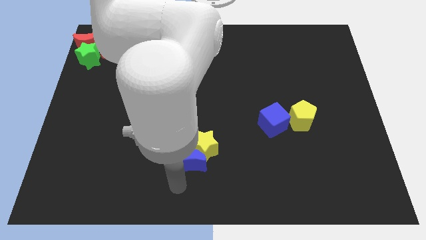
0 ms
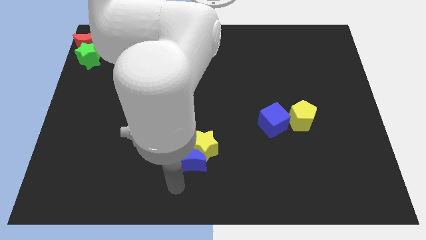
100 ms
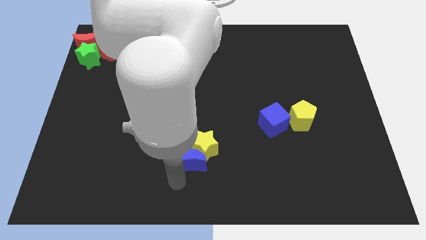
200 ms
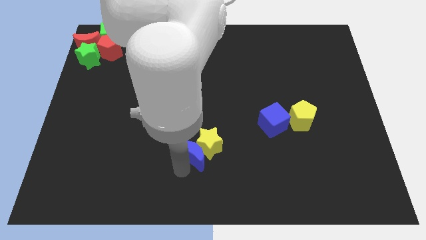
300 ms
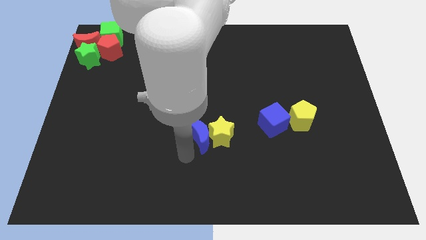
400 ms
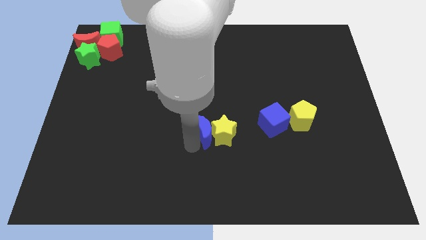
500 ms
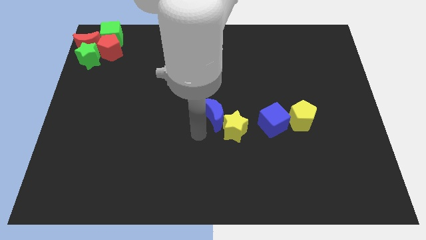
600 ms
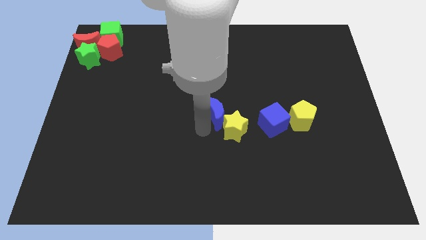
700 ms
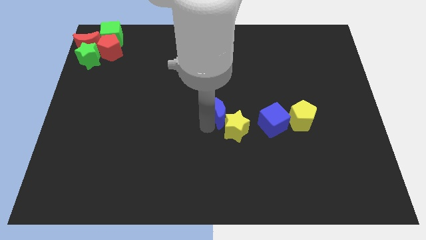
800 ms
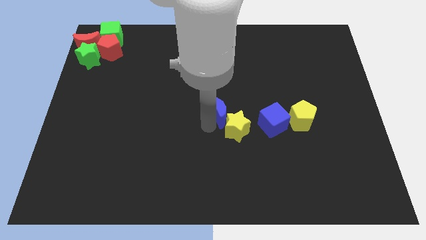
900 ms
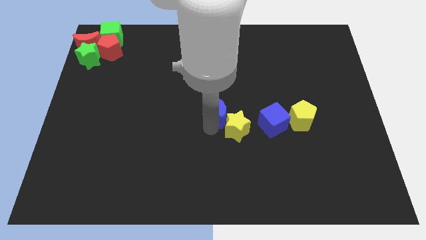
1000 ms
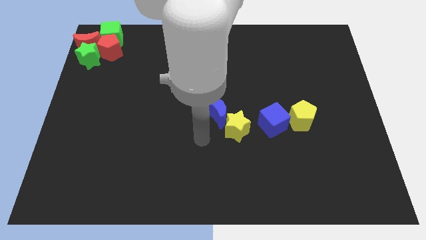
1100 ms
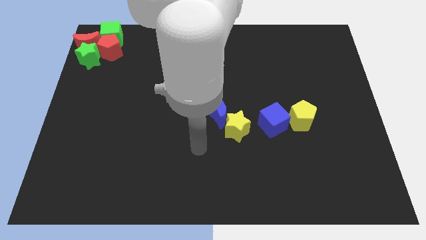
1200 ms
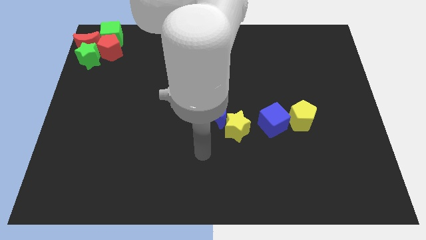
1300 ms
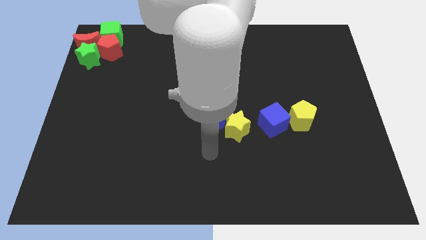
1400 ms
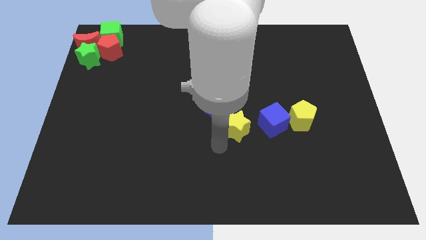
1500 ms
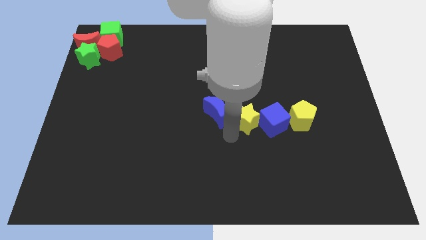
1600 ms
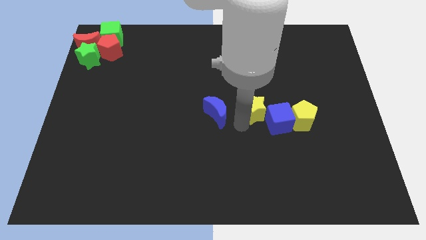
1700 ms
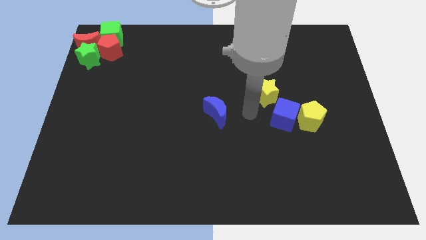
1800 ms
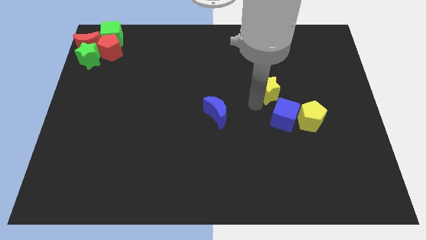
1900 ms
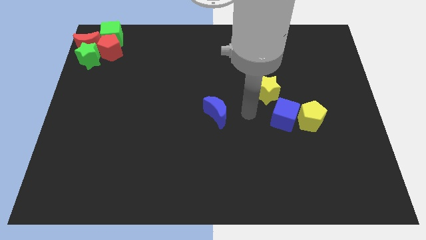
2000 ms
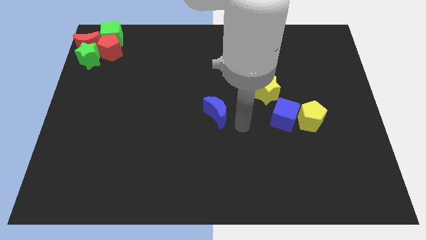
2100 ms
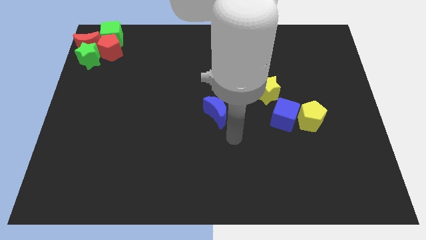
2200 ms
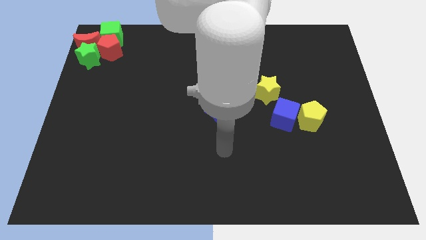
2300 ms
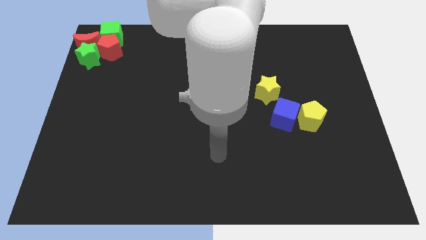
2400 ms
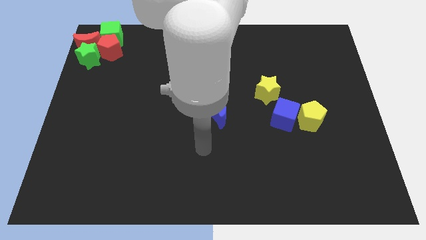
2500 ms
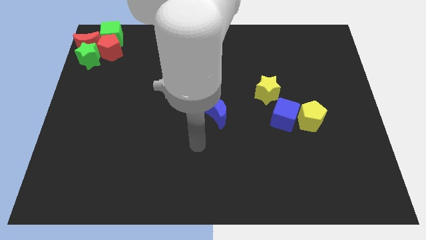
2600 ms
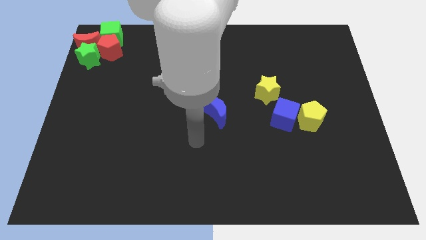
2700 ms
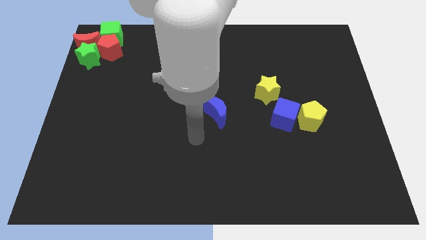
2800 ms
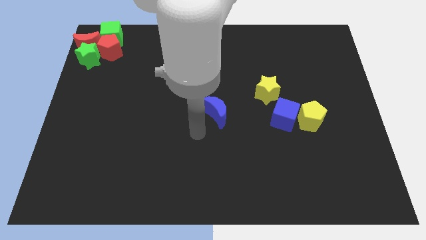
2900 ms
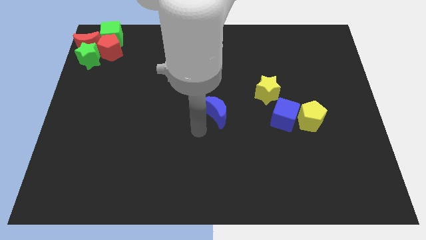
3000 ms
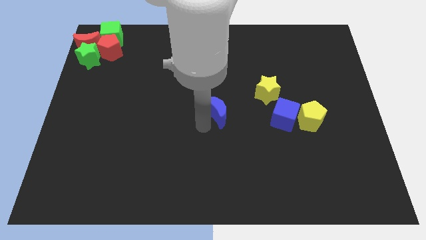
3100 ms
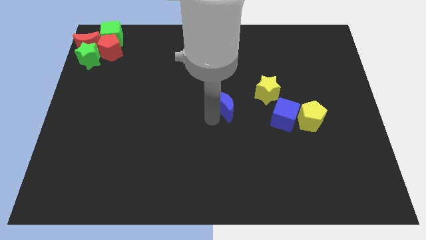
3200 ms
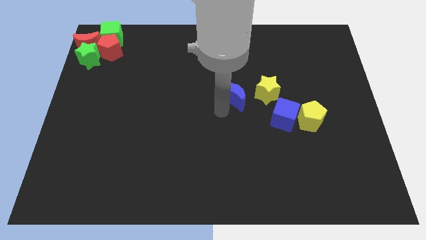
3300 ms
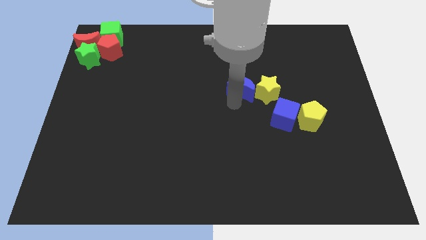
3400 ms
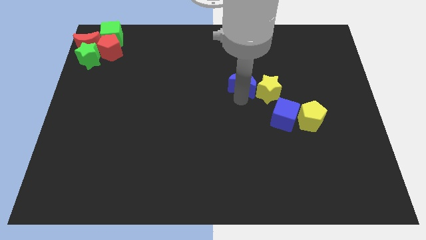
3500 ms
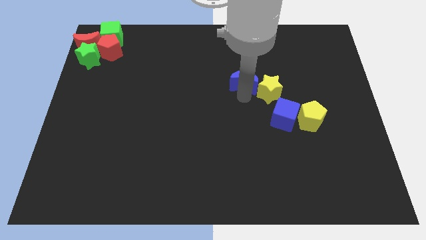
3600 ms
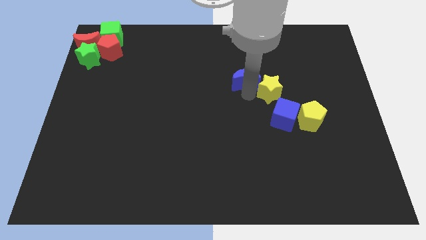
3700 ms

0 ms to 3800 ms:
push the yellow star and blue moon at the top left of the blue cube

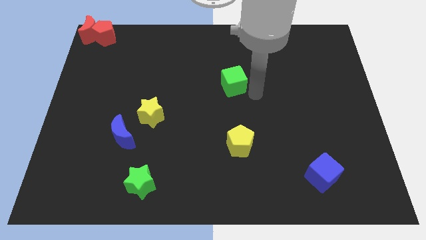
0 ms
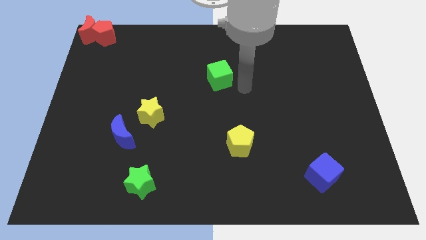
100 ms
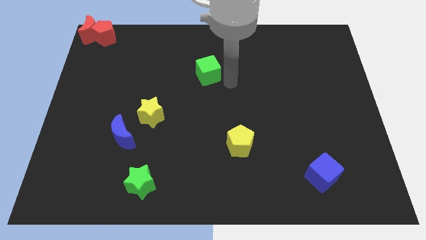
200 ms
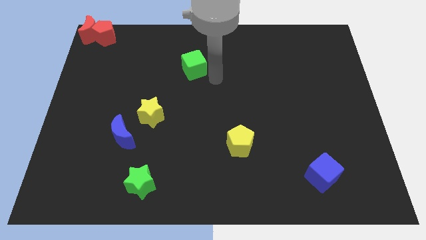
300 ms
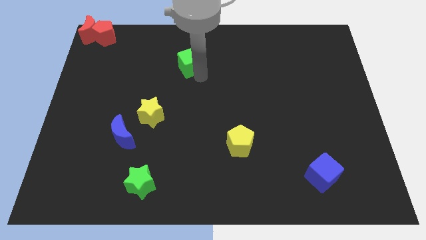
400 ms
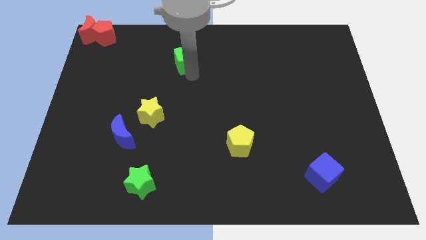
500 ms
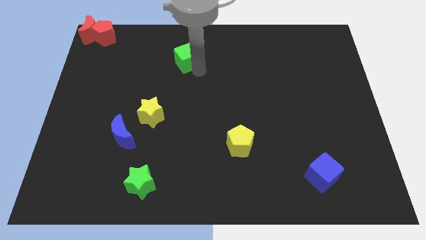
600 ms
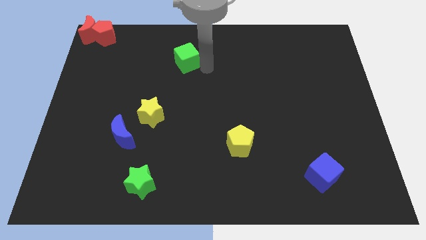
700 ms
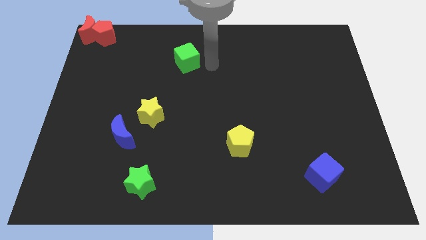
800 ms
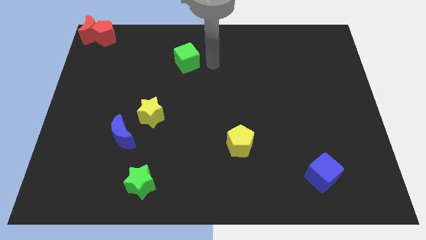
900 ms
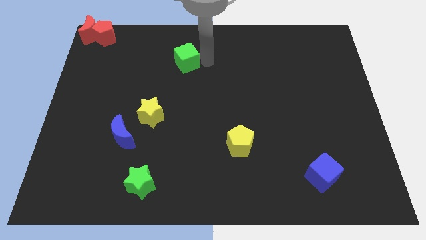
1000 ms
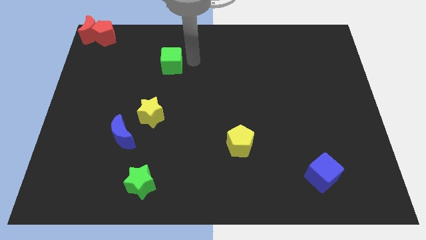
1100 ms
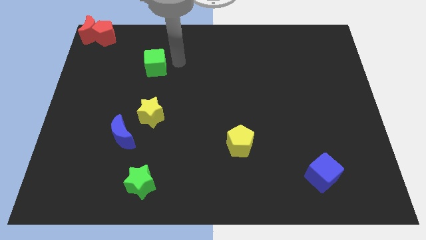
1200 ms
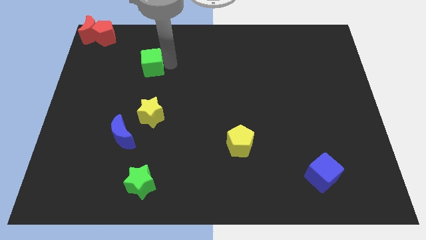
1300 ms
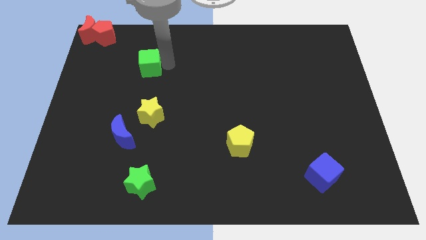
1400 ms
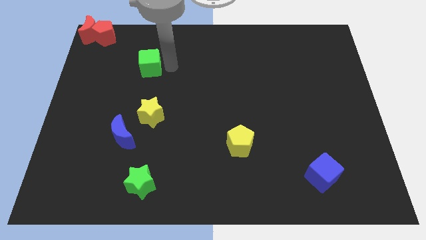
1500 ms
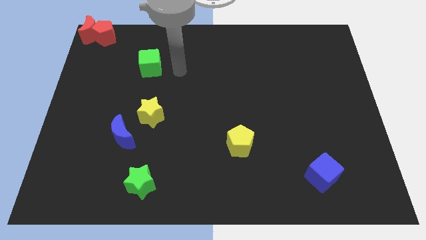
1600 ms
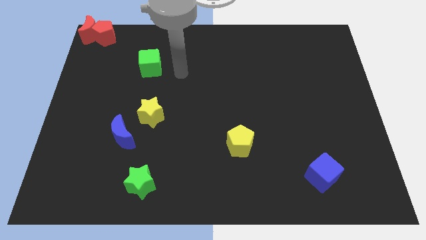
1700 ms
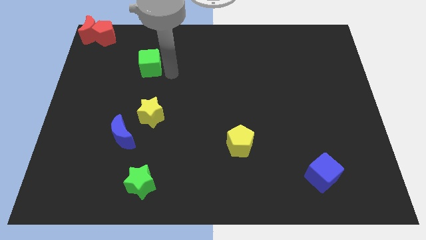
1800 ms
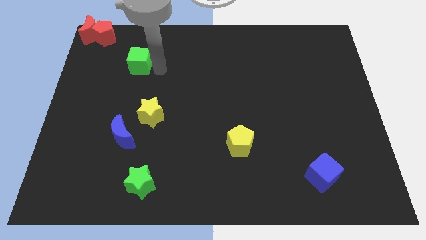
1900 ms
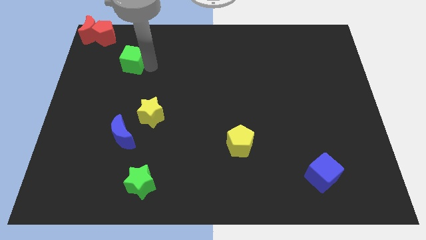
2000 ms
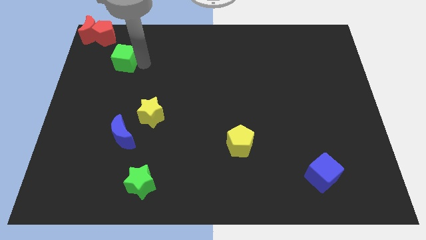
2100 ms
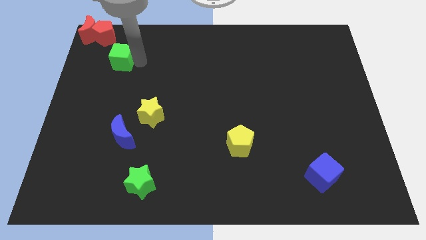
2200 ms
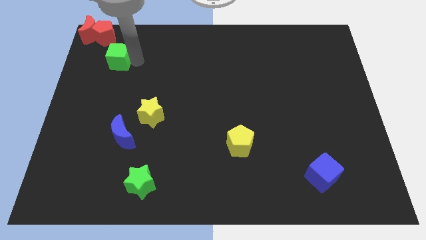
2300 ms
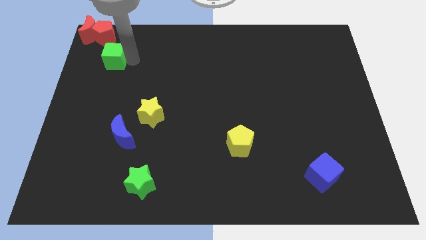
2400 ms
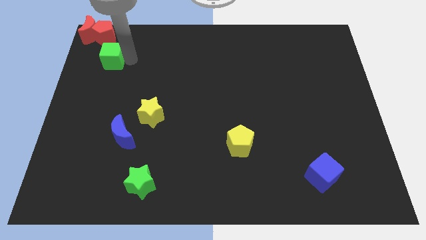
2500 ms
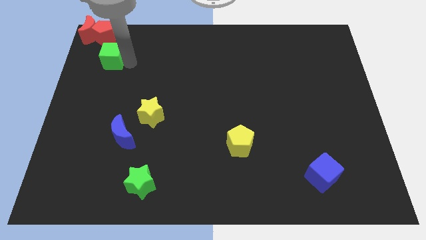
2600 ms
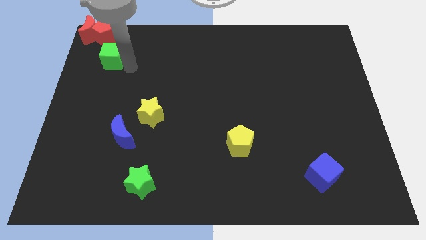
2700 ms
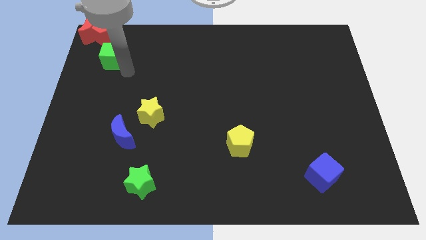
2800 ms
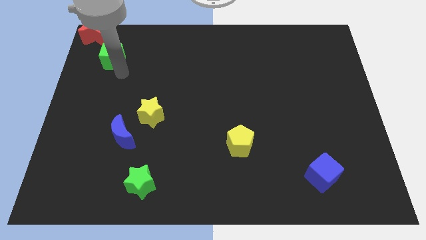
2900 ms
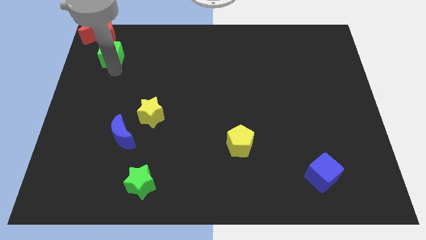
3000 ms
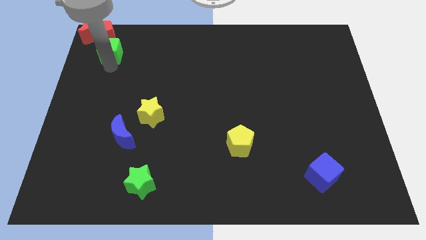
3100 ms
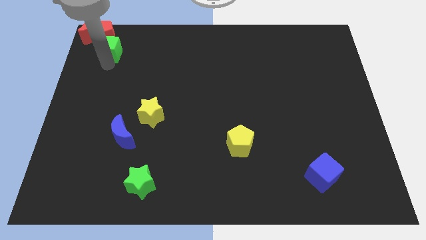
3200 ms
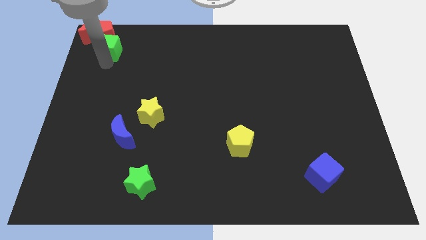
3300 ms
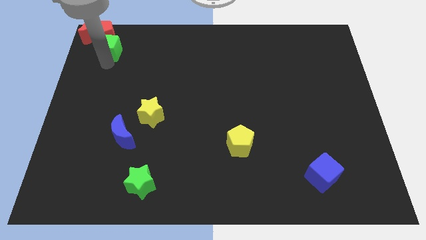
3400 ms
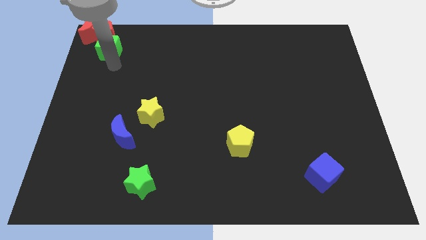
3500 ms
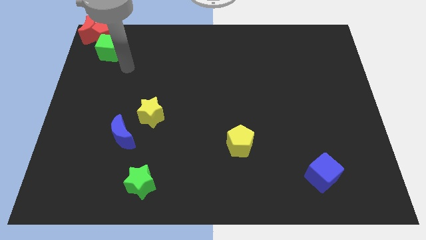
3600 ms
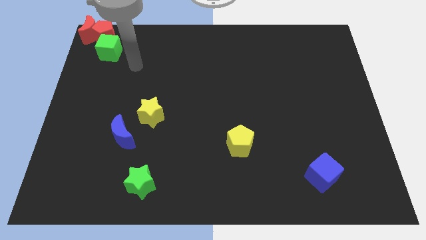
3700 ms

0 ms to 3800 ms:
move the green cube towards the top left corner

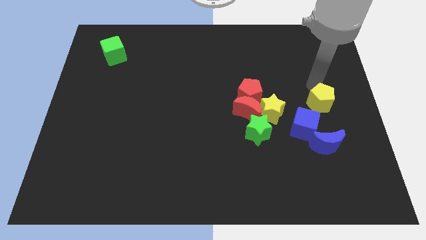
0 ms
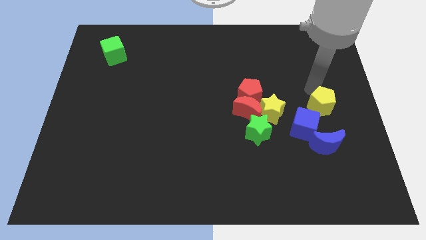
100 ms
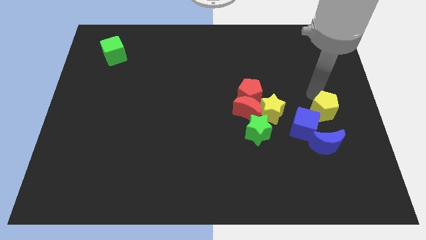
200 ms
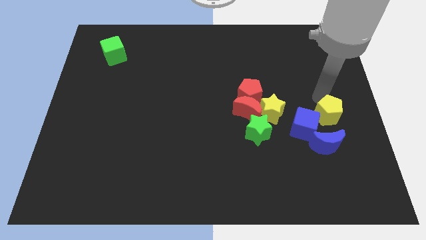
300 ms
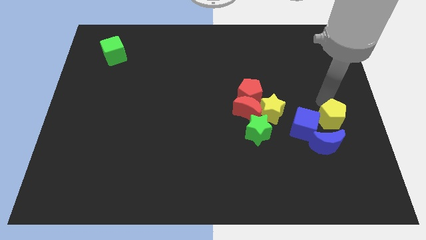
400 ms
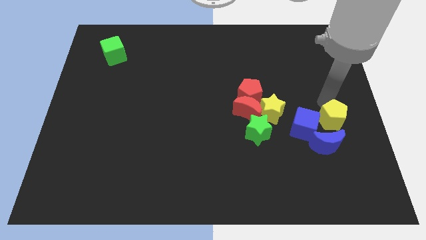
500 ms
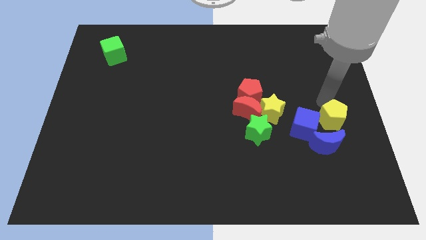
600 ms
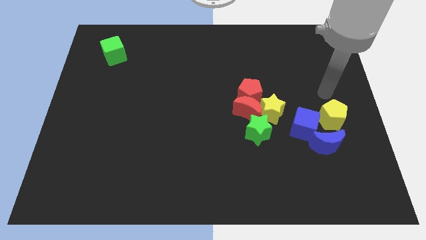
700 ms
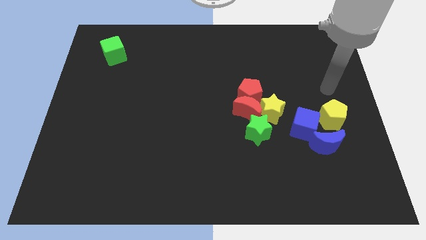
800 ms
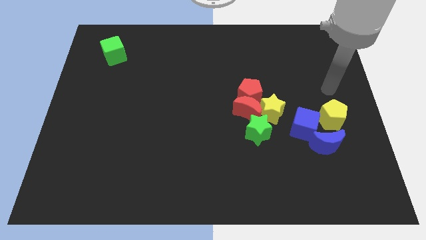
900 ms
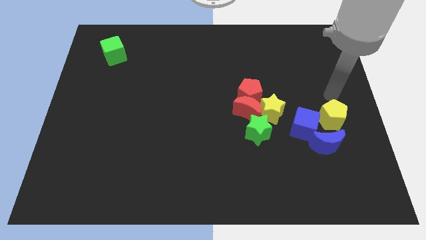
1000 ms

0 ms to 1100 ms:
move the yellow pentagon into the blue blocks

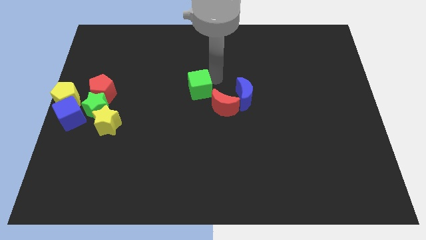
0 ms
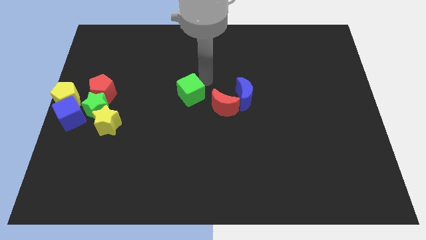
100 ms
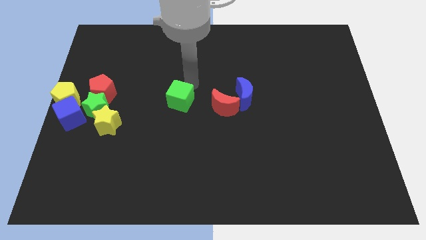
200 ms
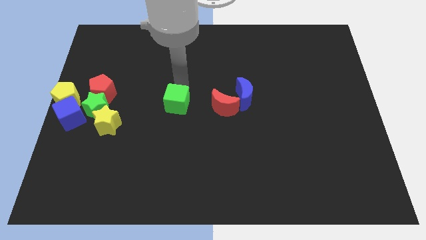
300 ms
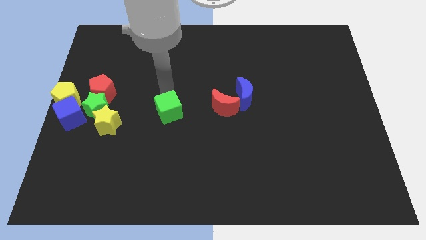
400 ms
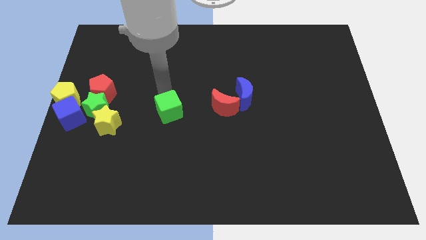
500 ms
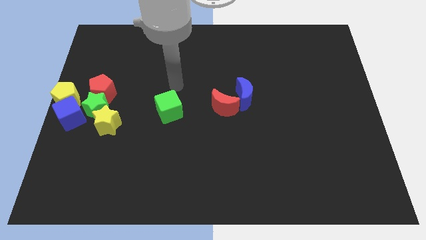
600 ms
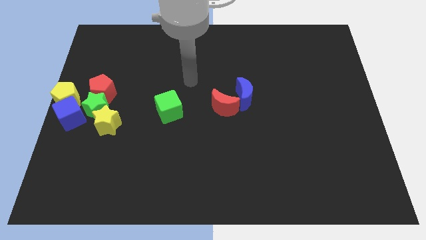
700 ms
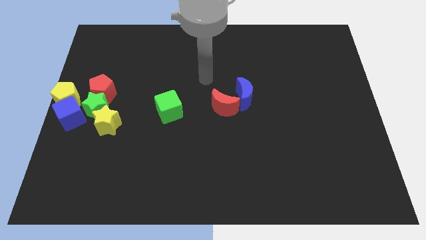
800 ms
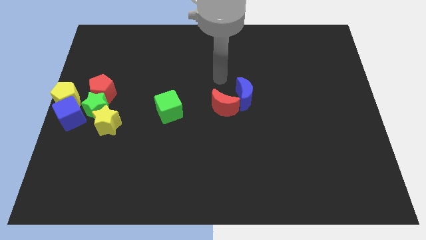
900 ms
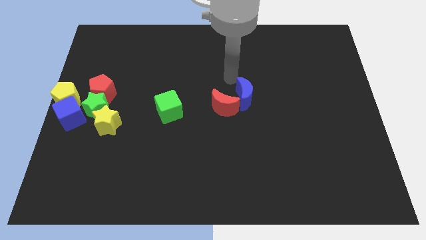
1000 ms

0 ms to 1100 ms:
place the green cube horizontally to the right side of the green star
